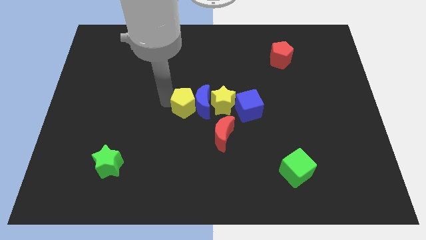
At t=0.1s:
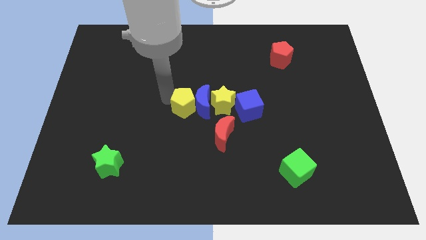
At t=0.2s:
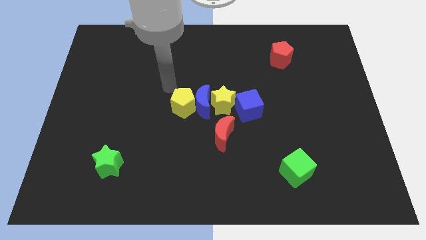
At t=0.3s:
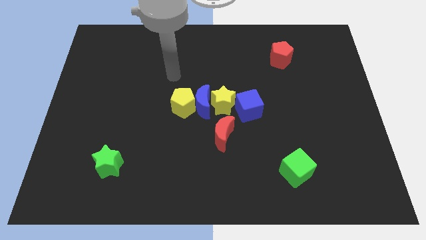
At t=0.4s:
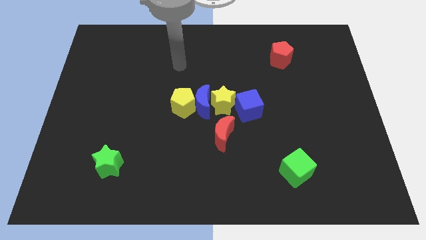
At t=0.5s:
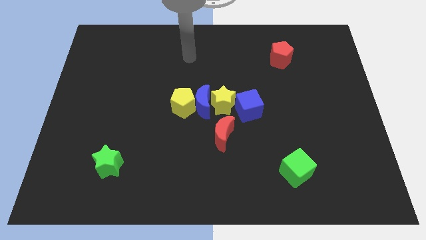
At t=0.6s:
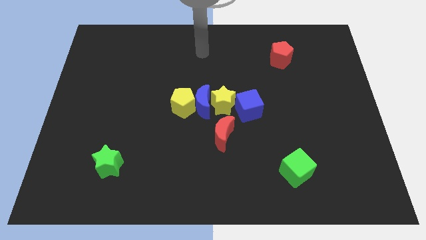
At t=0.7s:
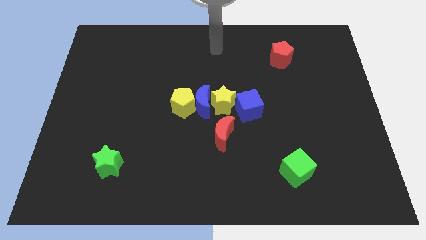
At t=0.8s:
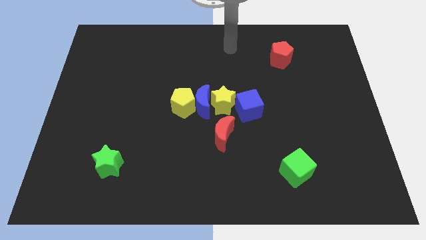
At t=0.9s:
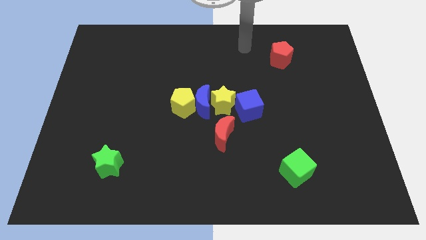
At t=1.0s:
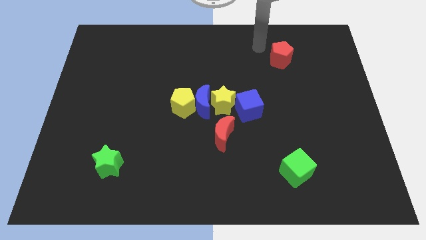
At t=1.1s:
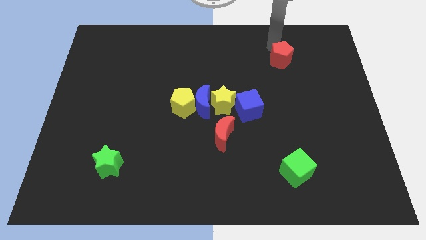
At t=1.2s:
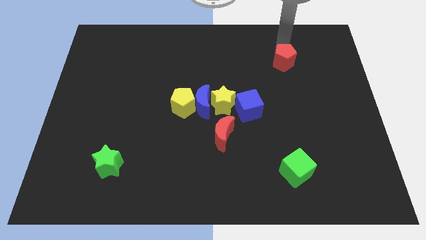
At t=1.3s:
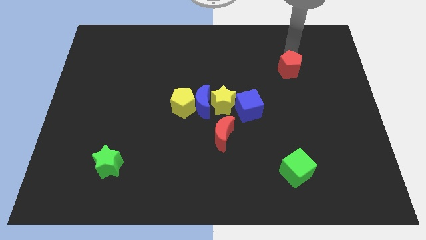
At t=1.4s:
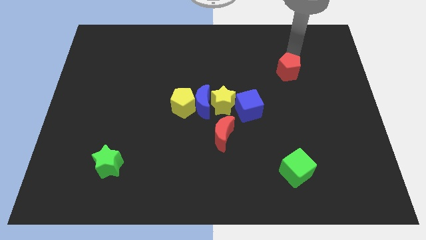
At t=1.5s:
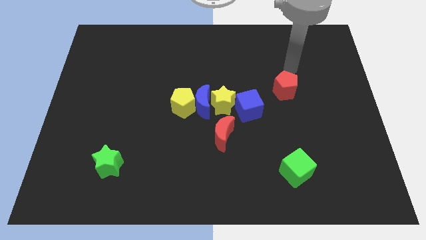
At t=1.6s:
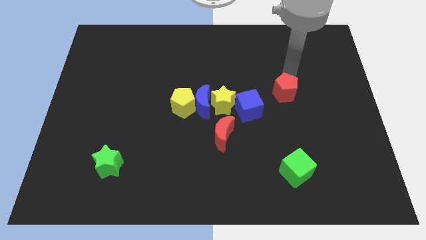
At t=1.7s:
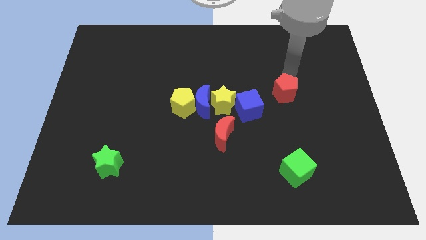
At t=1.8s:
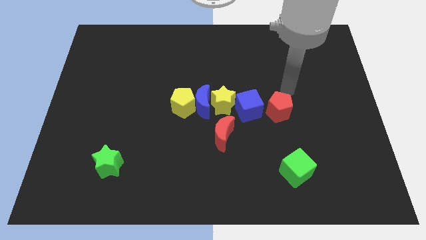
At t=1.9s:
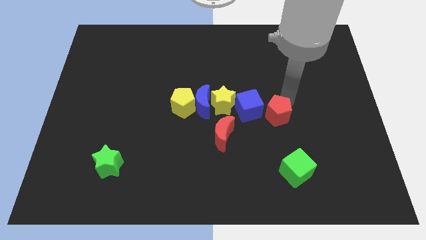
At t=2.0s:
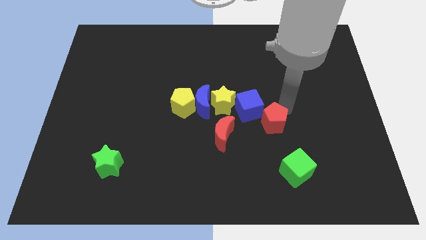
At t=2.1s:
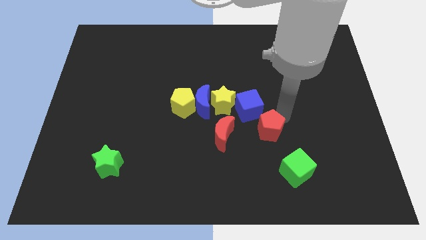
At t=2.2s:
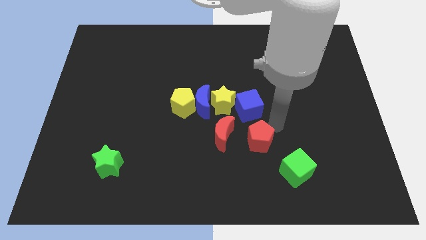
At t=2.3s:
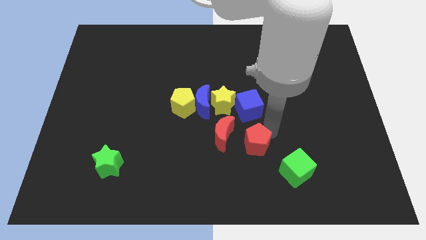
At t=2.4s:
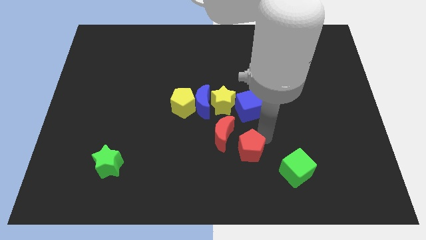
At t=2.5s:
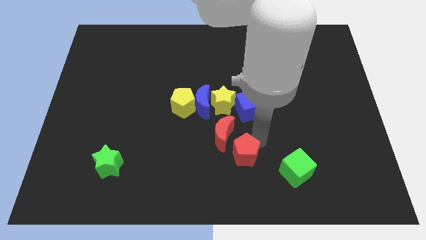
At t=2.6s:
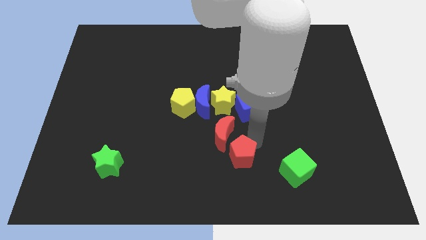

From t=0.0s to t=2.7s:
place the red pentagon below the blue cube

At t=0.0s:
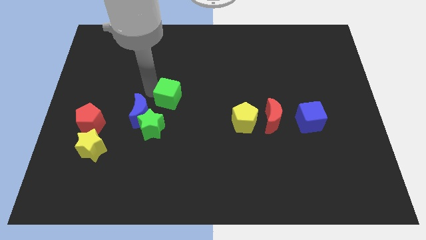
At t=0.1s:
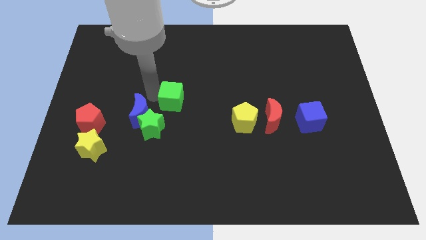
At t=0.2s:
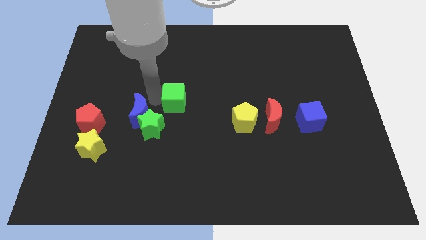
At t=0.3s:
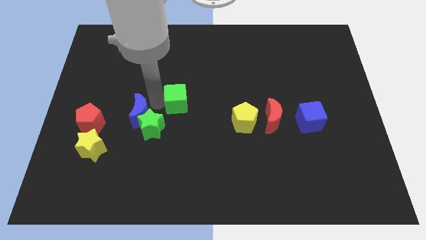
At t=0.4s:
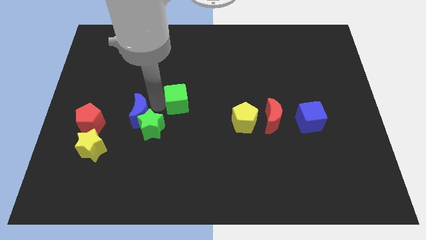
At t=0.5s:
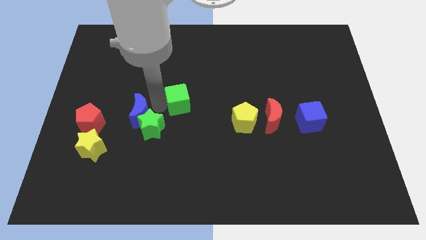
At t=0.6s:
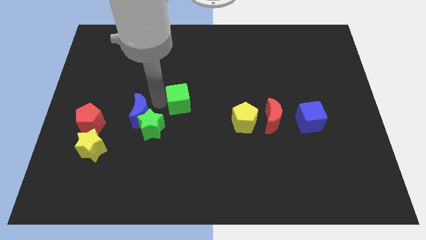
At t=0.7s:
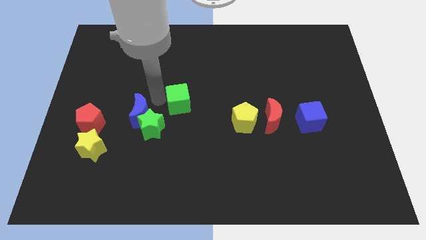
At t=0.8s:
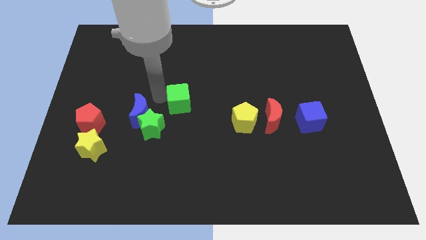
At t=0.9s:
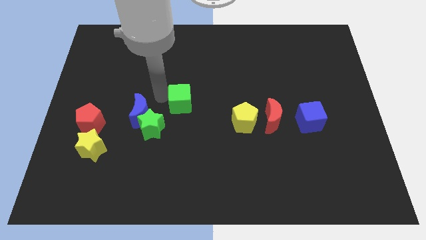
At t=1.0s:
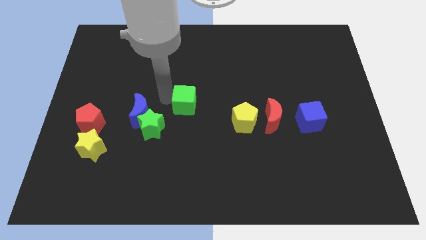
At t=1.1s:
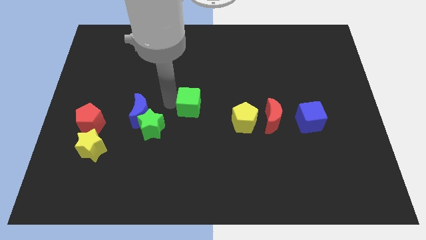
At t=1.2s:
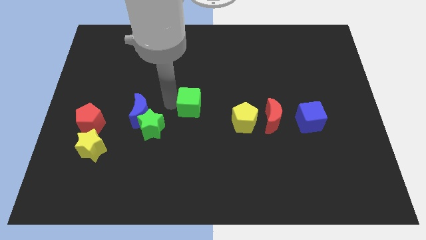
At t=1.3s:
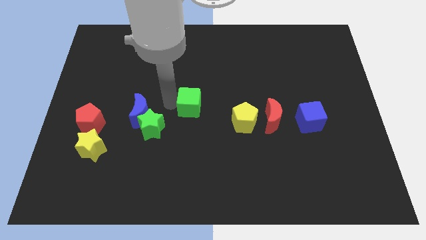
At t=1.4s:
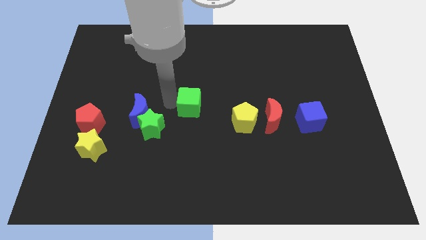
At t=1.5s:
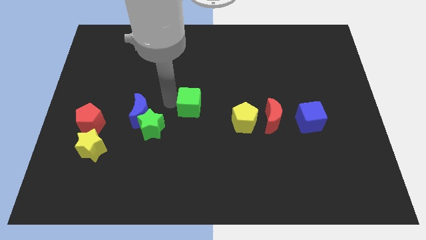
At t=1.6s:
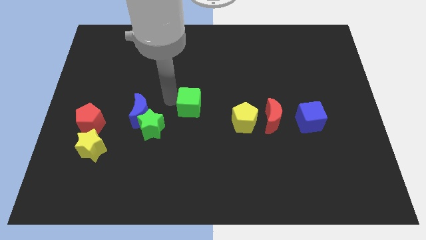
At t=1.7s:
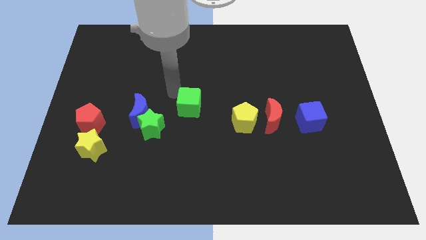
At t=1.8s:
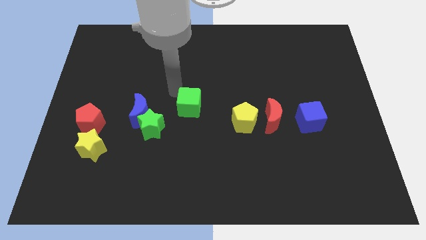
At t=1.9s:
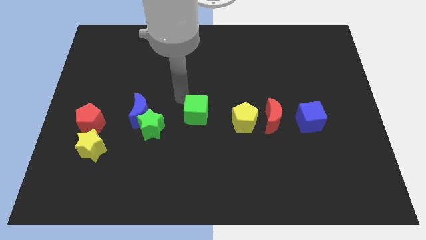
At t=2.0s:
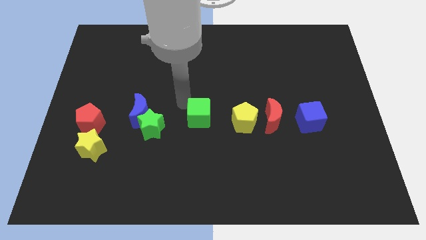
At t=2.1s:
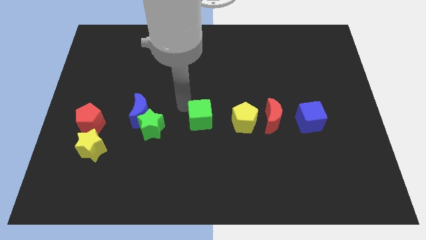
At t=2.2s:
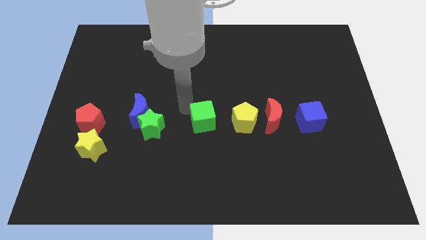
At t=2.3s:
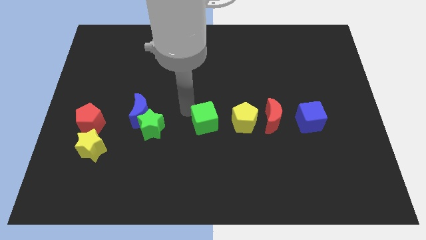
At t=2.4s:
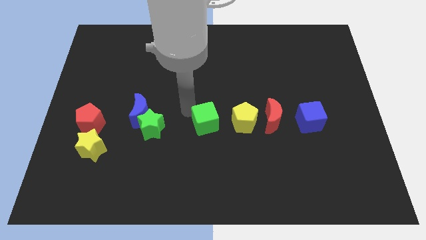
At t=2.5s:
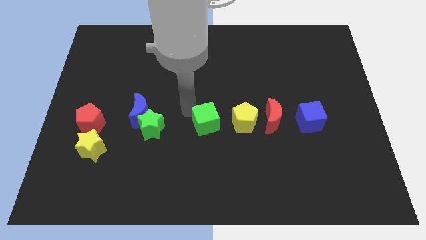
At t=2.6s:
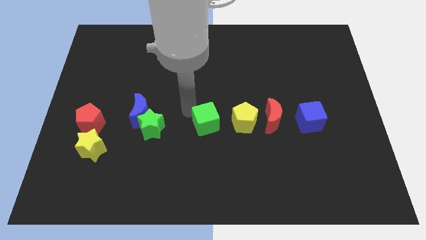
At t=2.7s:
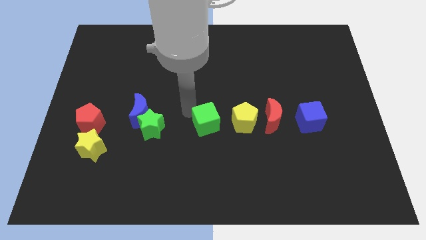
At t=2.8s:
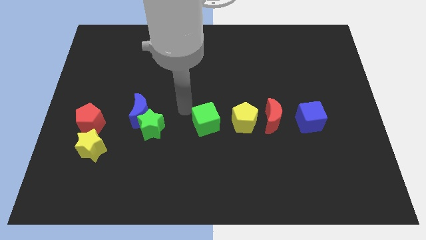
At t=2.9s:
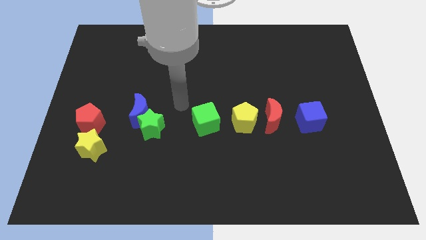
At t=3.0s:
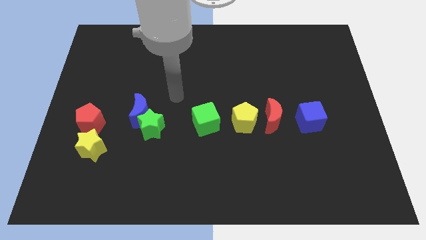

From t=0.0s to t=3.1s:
move the green cube to the left of the yellow pentagon

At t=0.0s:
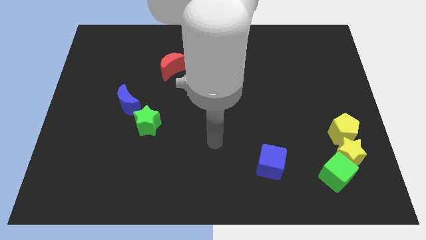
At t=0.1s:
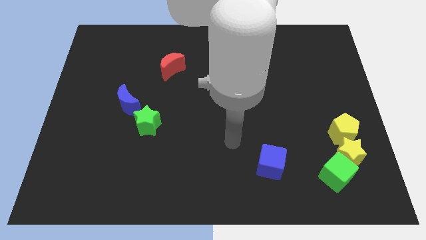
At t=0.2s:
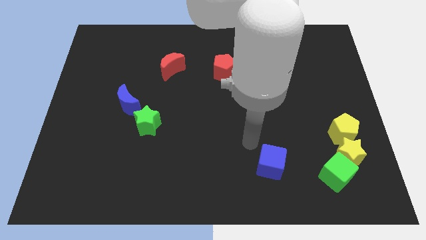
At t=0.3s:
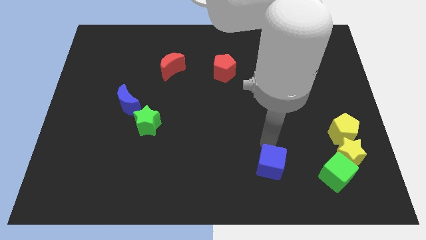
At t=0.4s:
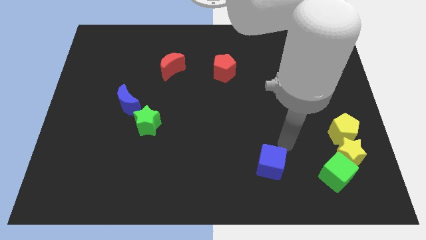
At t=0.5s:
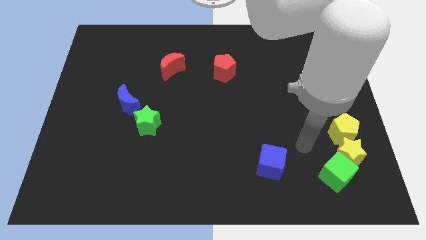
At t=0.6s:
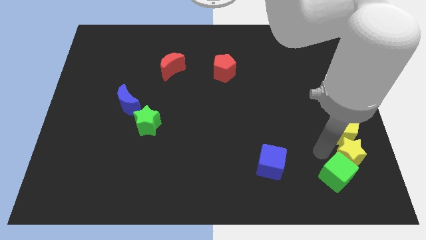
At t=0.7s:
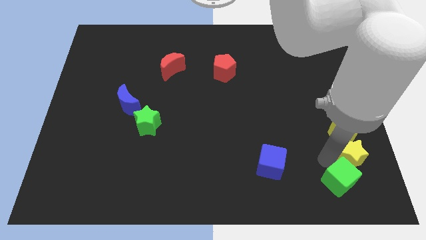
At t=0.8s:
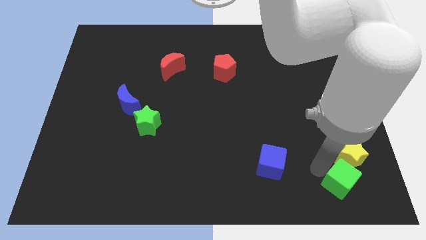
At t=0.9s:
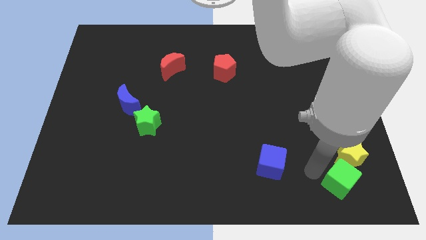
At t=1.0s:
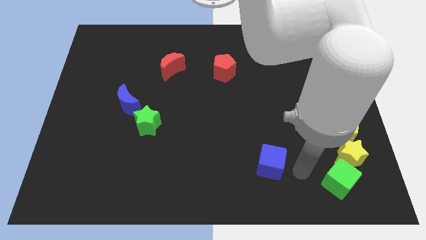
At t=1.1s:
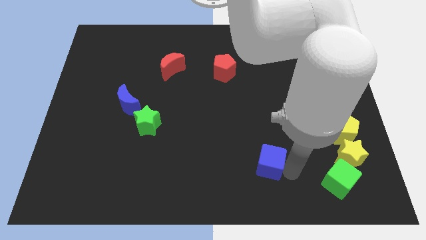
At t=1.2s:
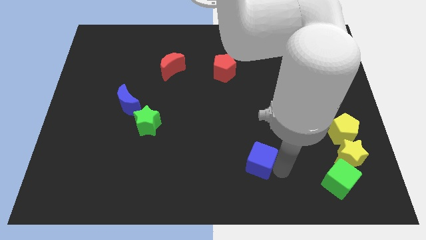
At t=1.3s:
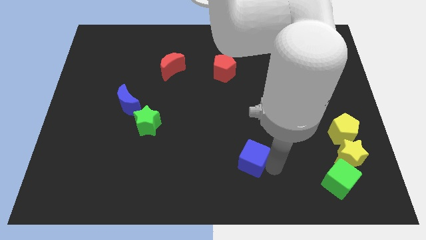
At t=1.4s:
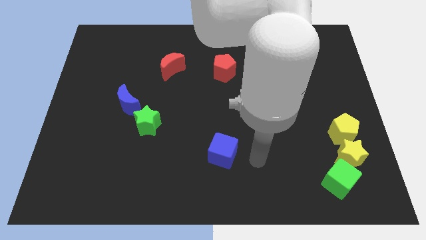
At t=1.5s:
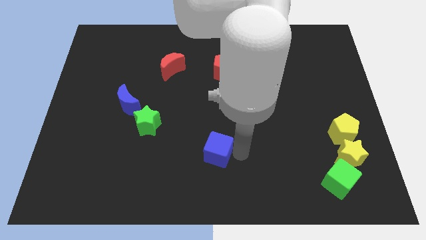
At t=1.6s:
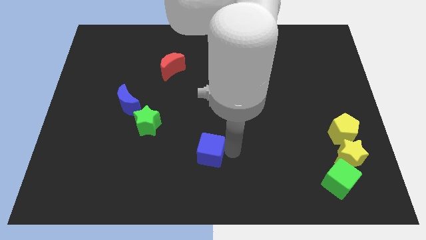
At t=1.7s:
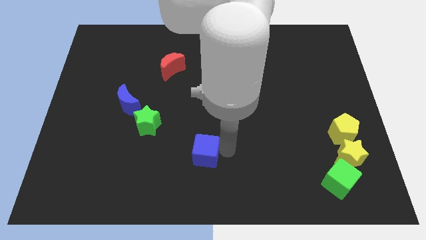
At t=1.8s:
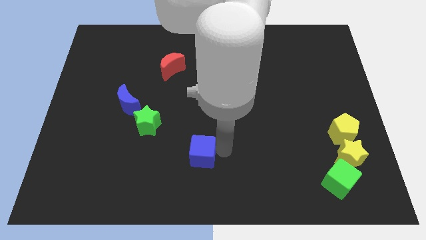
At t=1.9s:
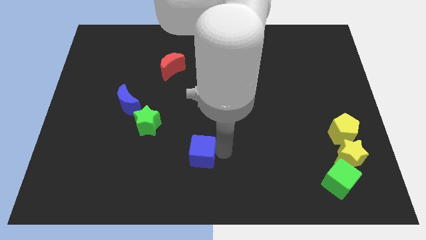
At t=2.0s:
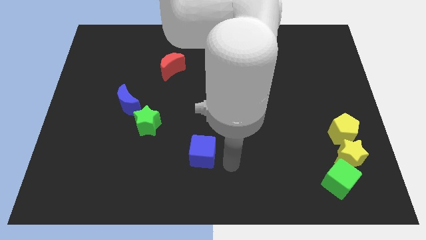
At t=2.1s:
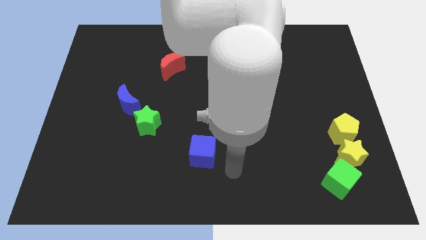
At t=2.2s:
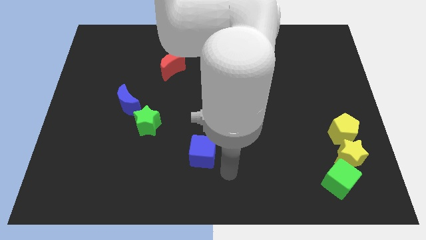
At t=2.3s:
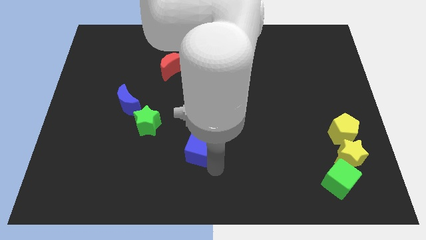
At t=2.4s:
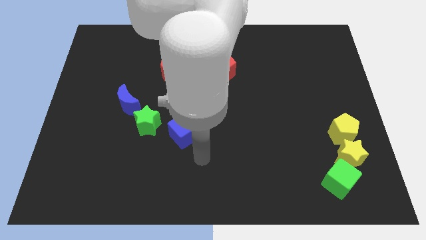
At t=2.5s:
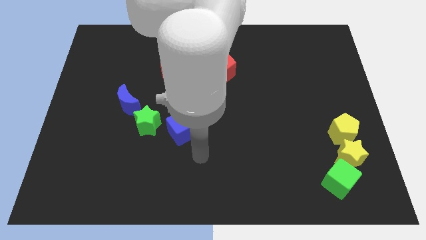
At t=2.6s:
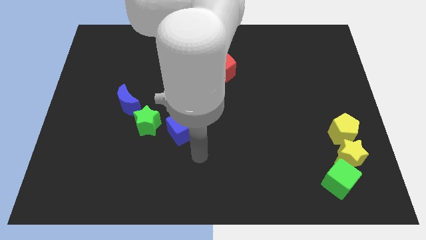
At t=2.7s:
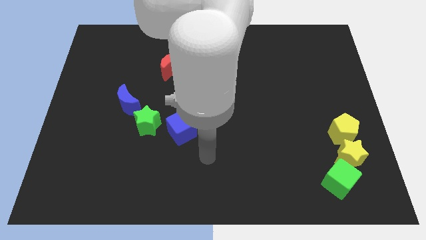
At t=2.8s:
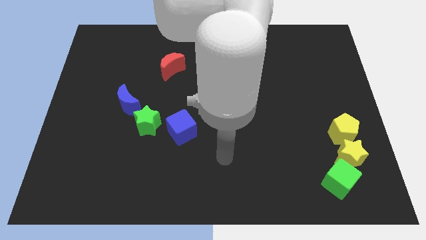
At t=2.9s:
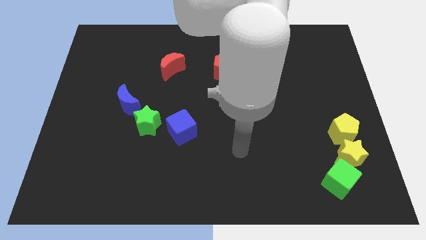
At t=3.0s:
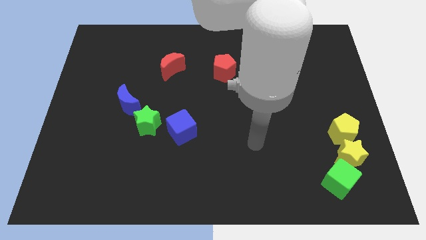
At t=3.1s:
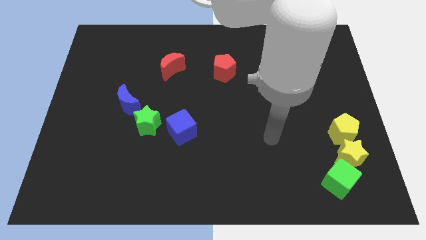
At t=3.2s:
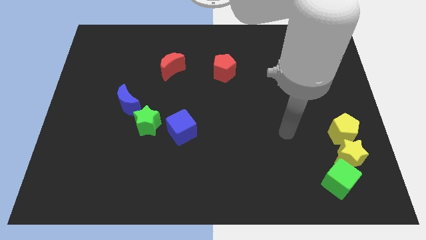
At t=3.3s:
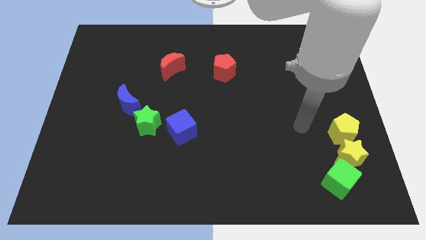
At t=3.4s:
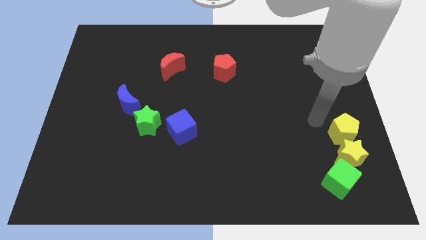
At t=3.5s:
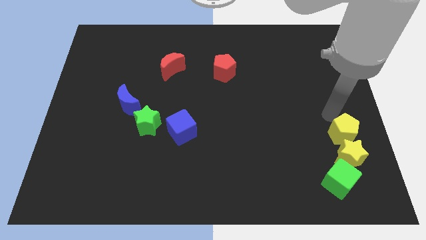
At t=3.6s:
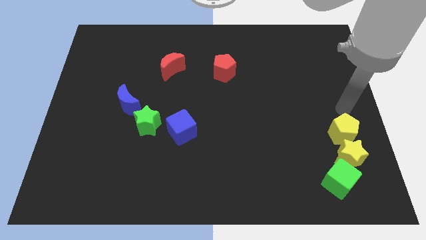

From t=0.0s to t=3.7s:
push the blue cube to the right of the green star
